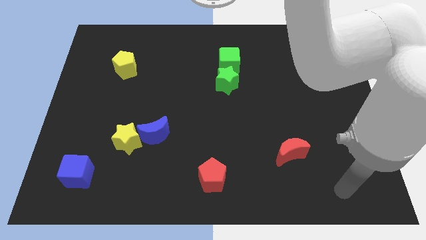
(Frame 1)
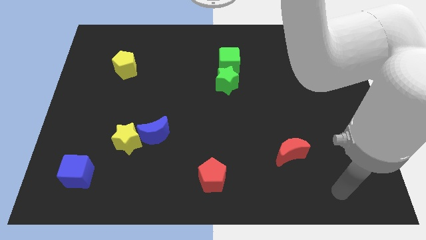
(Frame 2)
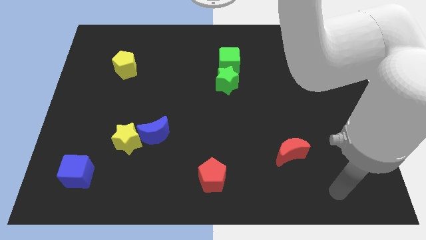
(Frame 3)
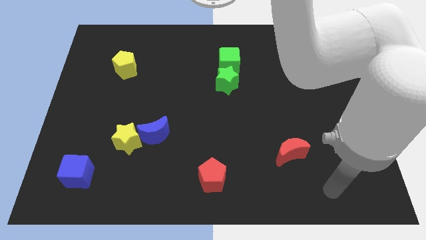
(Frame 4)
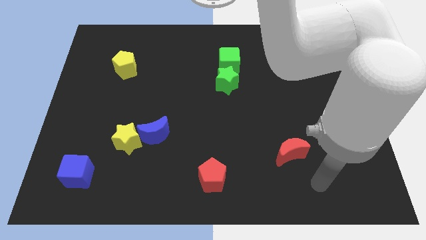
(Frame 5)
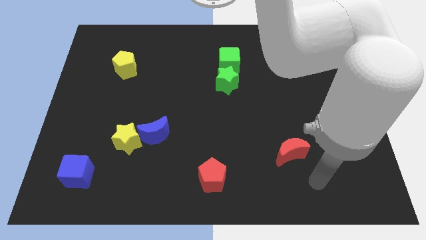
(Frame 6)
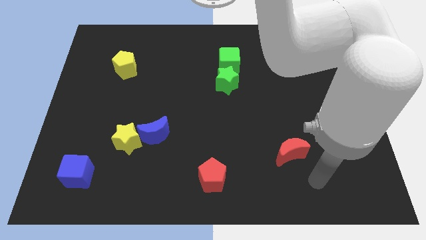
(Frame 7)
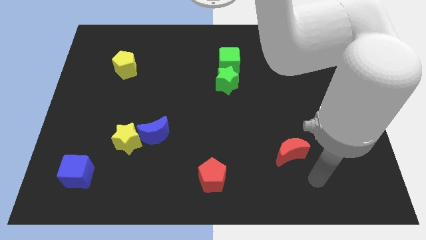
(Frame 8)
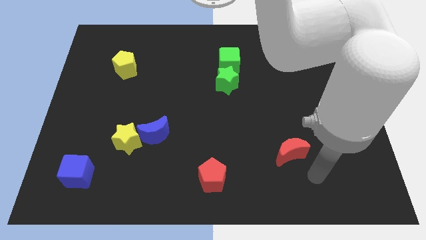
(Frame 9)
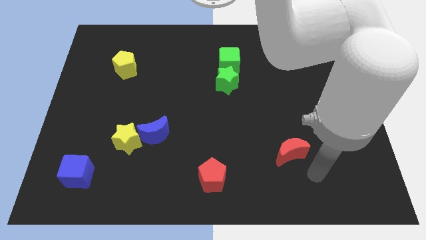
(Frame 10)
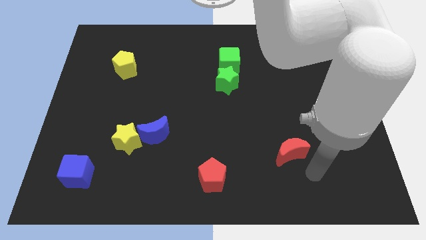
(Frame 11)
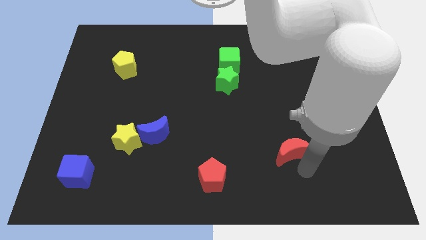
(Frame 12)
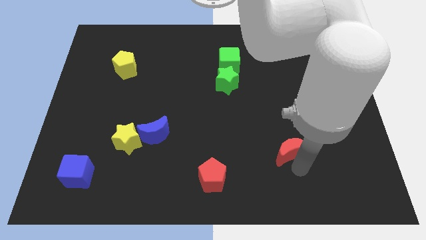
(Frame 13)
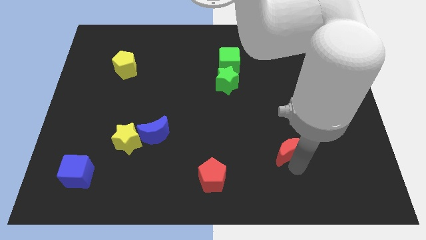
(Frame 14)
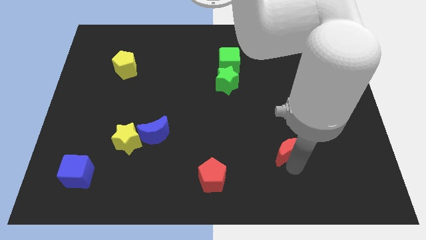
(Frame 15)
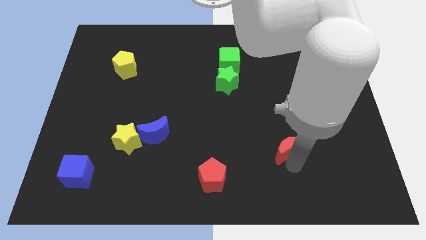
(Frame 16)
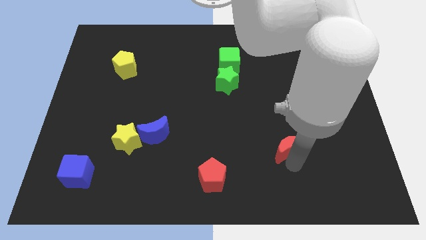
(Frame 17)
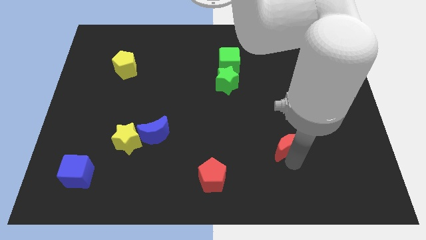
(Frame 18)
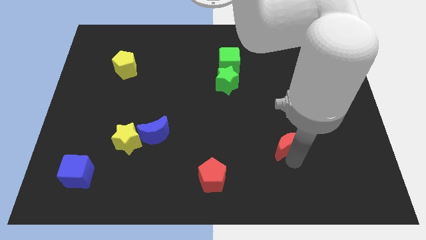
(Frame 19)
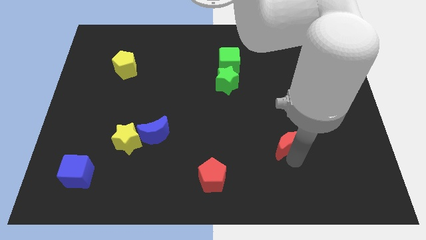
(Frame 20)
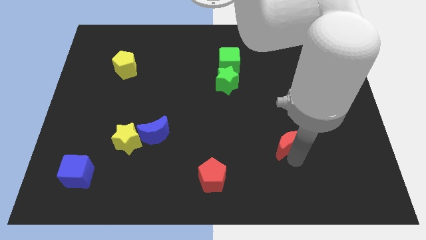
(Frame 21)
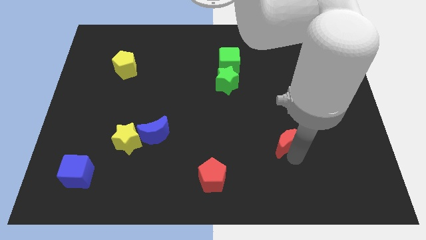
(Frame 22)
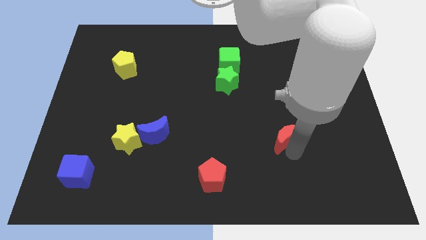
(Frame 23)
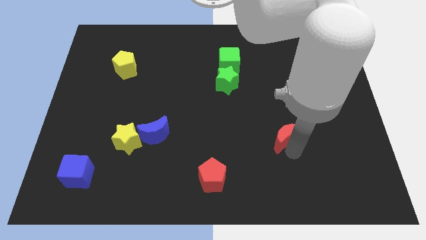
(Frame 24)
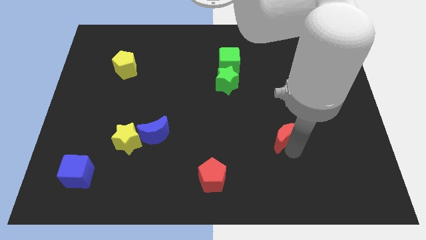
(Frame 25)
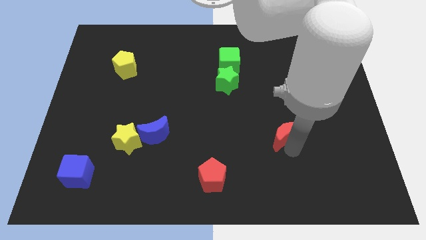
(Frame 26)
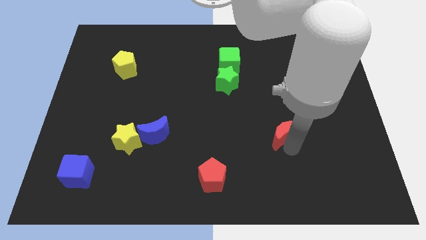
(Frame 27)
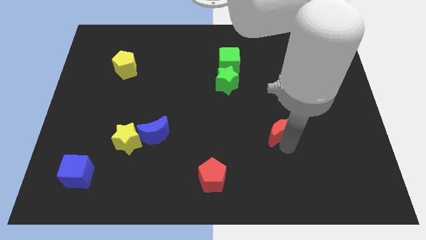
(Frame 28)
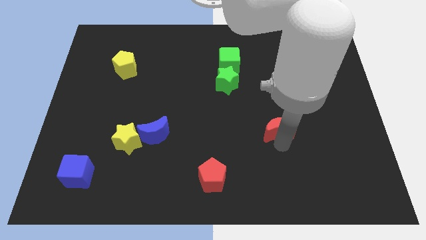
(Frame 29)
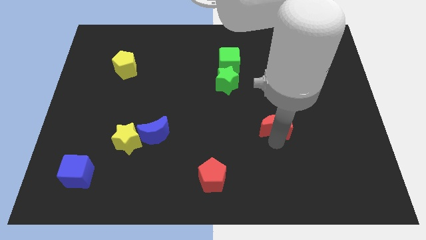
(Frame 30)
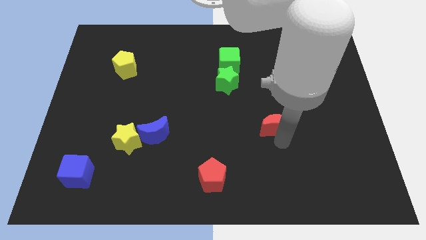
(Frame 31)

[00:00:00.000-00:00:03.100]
put the red crescent parallel to the blue crescent

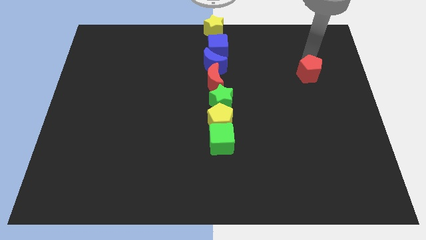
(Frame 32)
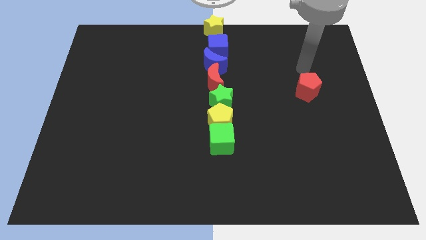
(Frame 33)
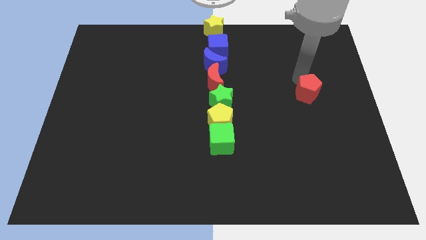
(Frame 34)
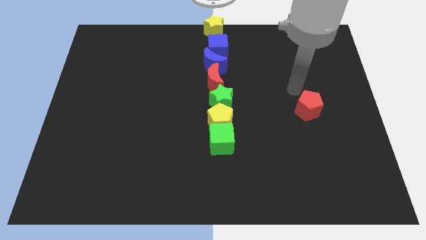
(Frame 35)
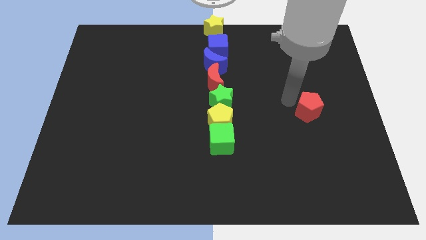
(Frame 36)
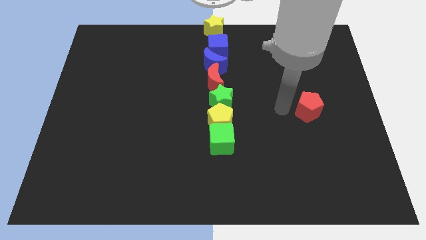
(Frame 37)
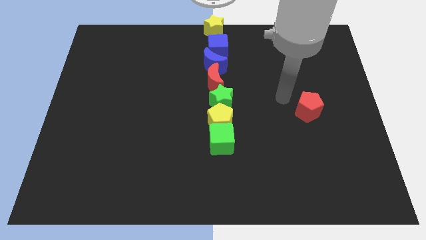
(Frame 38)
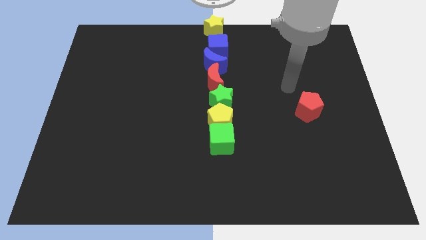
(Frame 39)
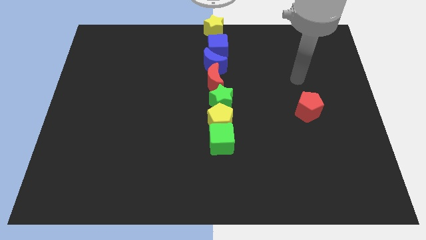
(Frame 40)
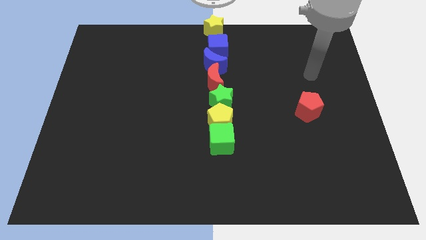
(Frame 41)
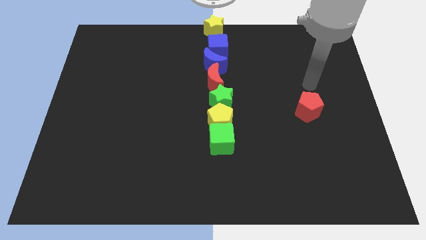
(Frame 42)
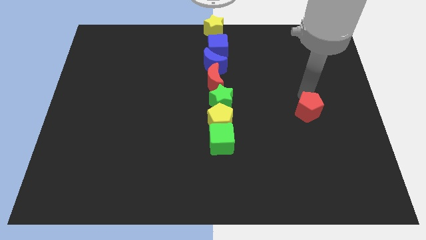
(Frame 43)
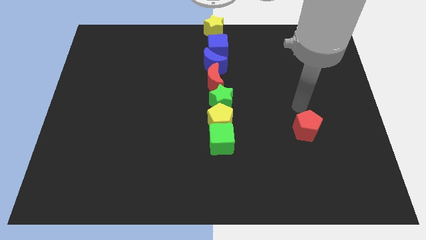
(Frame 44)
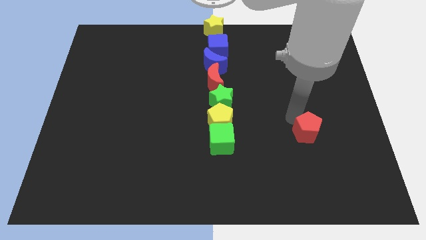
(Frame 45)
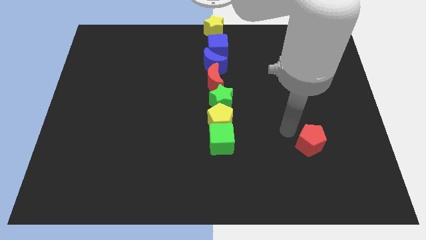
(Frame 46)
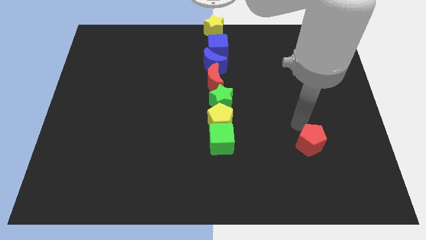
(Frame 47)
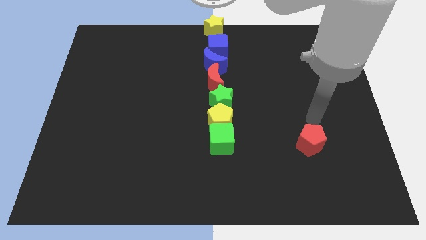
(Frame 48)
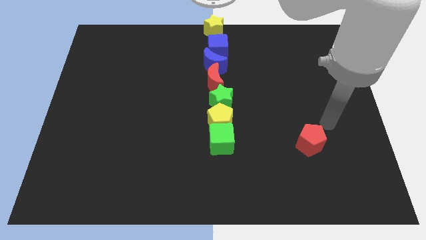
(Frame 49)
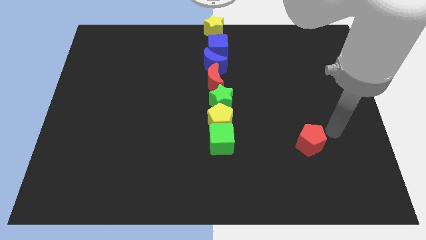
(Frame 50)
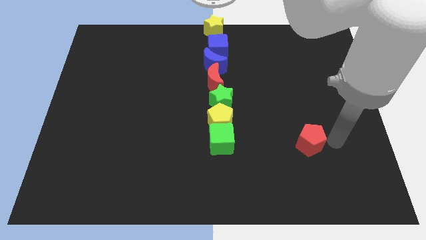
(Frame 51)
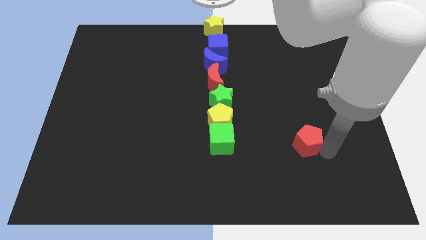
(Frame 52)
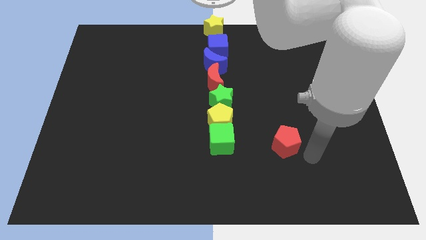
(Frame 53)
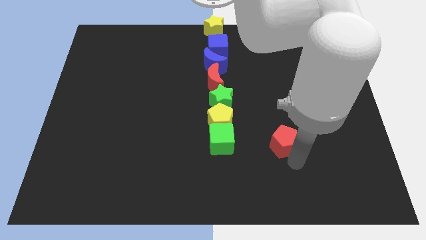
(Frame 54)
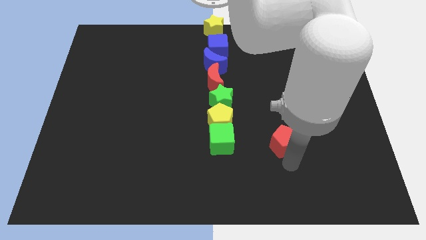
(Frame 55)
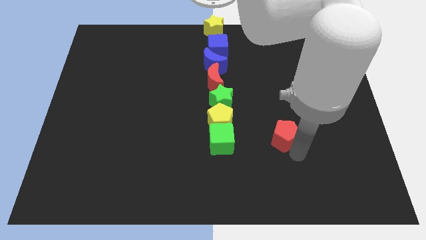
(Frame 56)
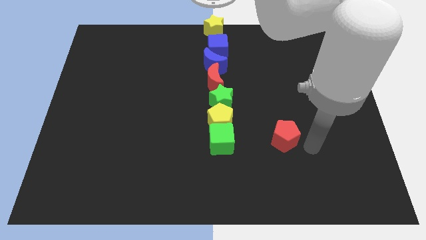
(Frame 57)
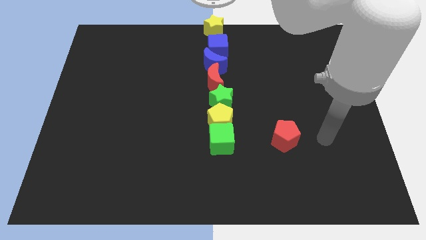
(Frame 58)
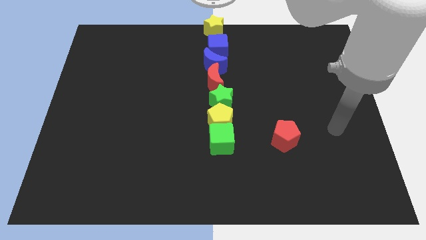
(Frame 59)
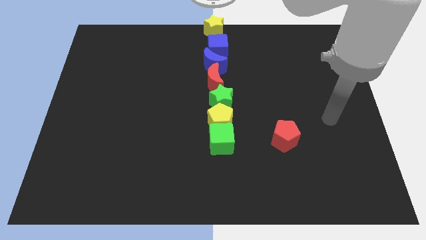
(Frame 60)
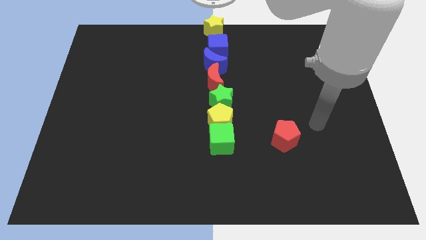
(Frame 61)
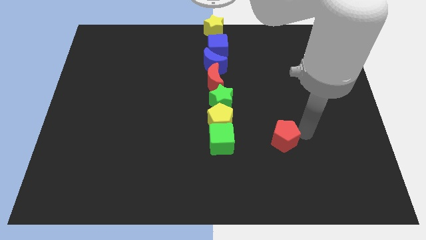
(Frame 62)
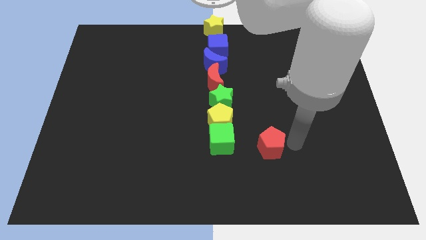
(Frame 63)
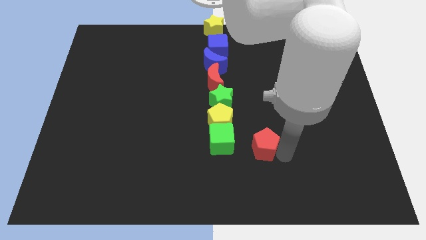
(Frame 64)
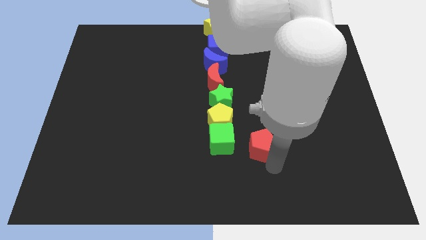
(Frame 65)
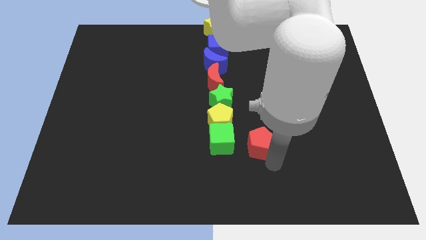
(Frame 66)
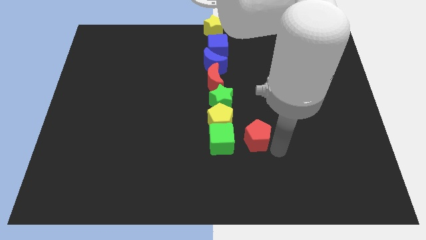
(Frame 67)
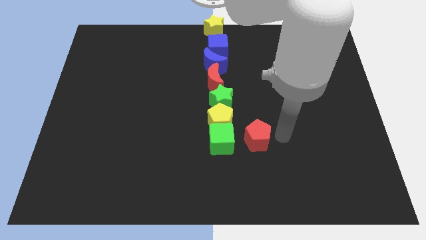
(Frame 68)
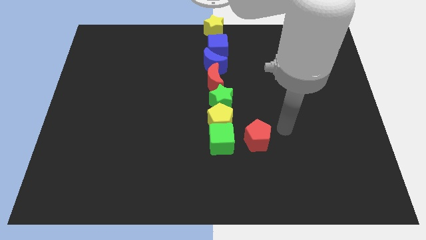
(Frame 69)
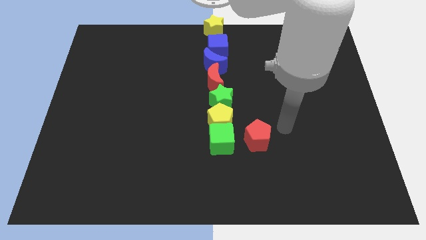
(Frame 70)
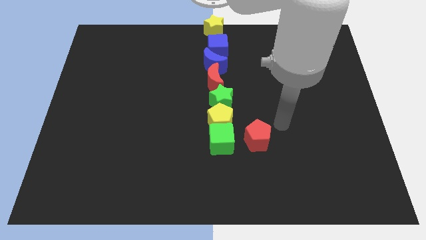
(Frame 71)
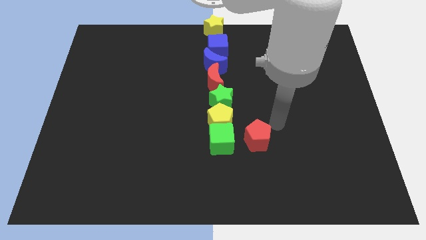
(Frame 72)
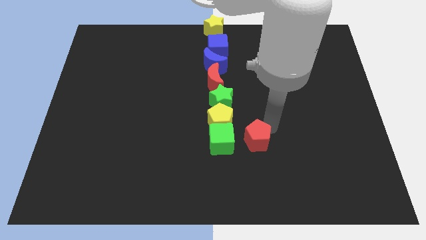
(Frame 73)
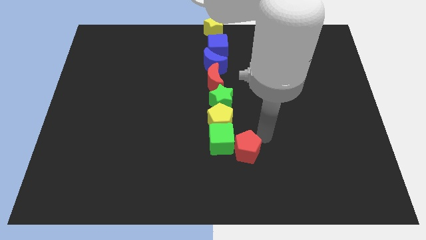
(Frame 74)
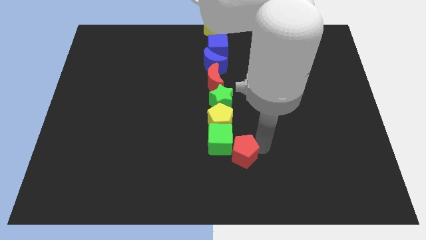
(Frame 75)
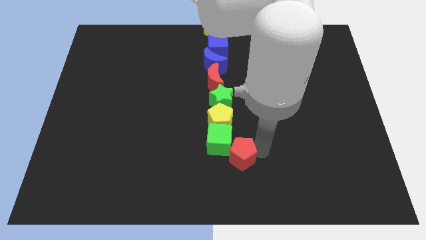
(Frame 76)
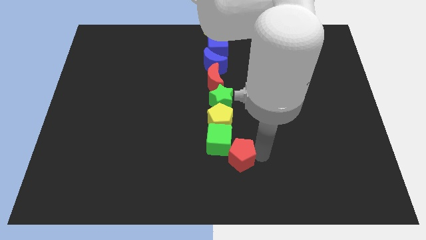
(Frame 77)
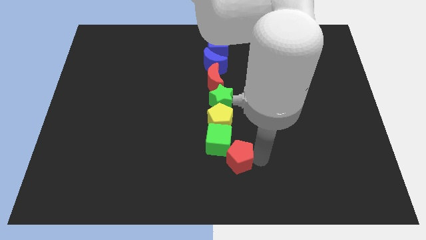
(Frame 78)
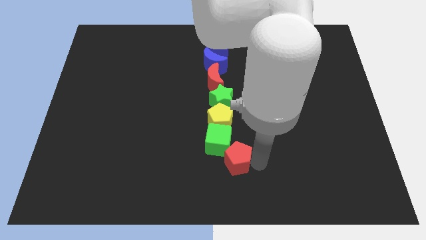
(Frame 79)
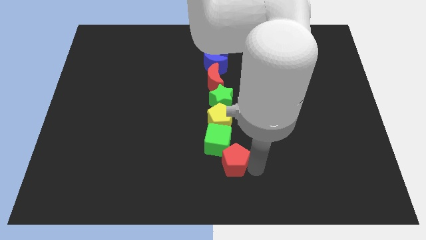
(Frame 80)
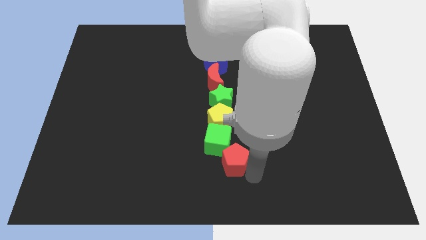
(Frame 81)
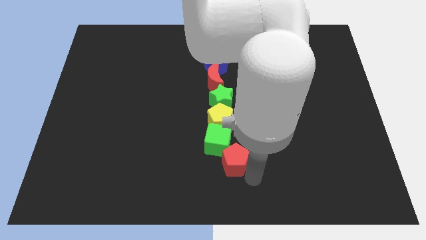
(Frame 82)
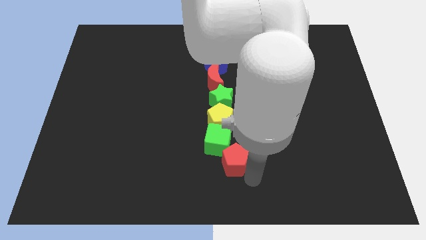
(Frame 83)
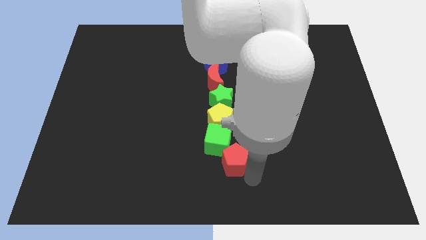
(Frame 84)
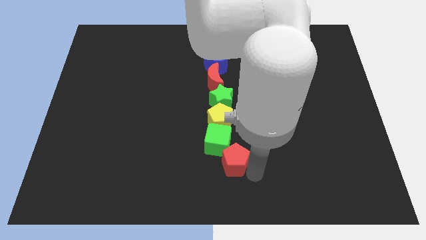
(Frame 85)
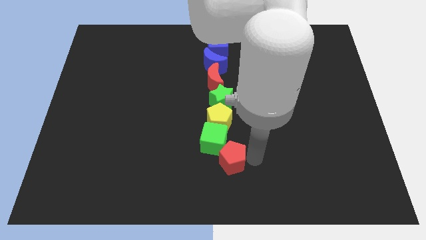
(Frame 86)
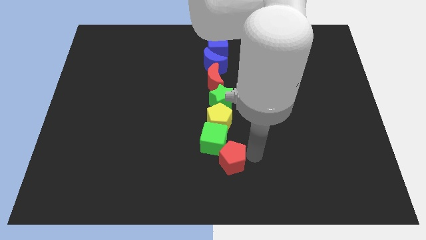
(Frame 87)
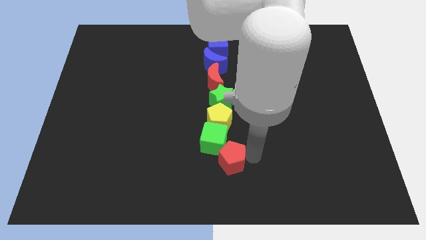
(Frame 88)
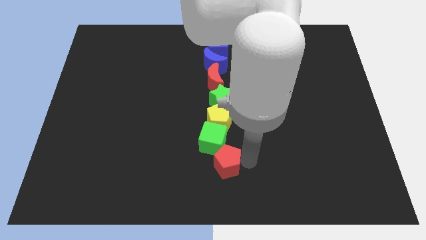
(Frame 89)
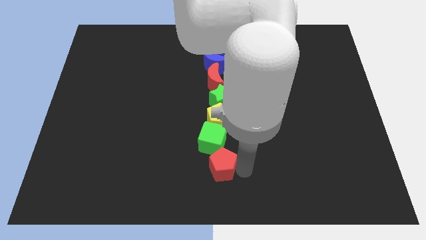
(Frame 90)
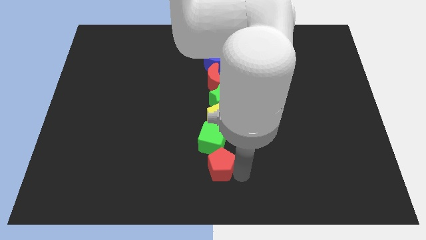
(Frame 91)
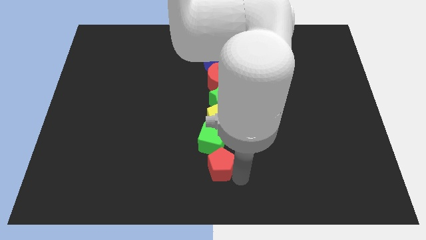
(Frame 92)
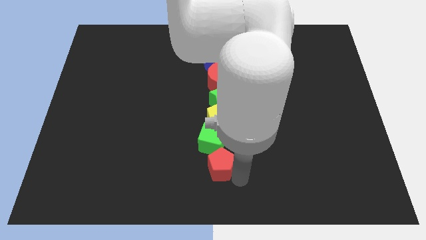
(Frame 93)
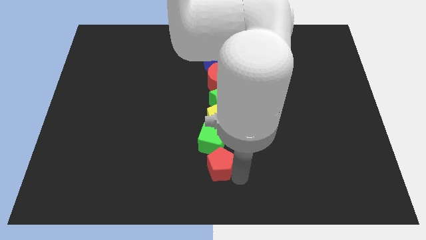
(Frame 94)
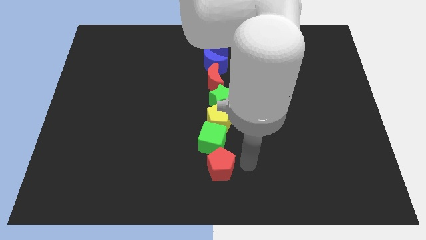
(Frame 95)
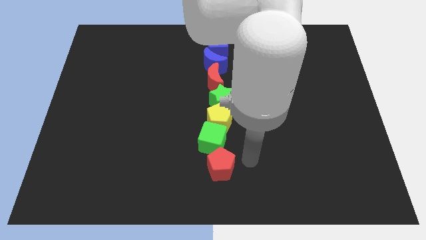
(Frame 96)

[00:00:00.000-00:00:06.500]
move the red pentagon to the bottom right side of the green cube
